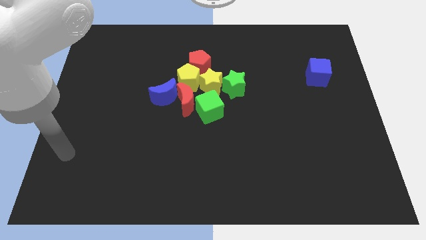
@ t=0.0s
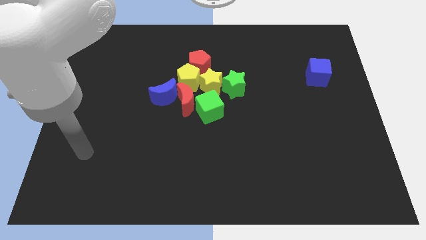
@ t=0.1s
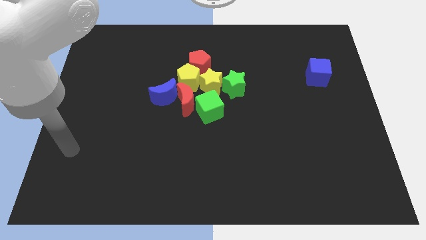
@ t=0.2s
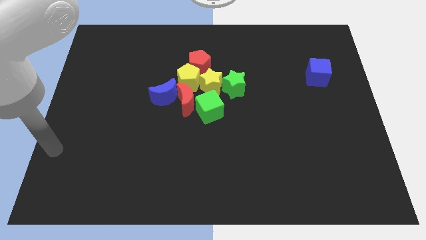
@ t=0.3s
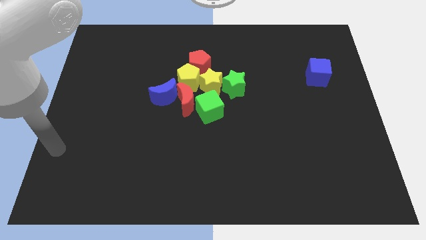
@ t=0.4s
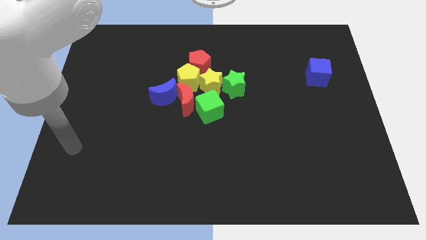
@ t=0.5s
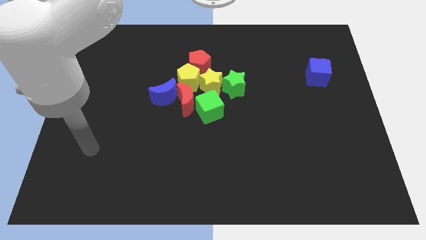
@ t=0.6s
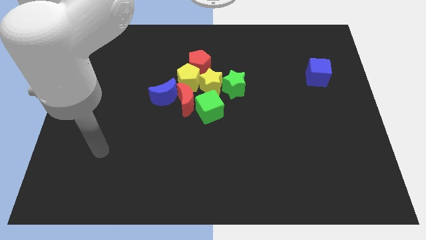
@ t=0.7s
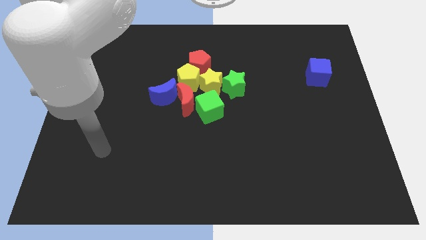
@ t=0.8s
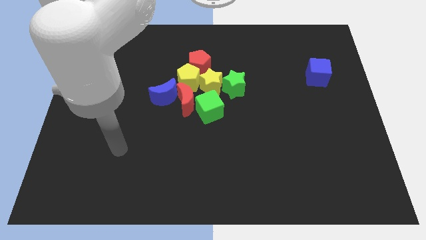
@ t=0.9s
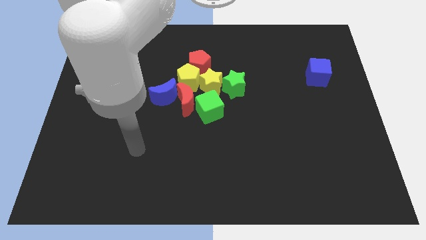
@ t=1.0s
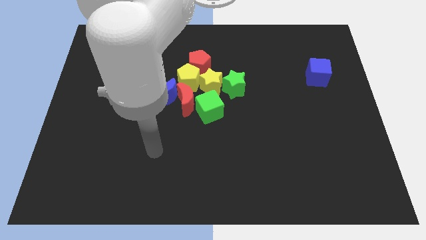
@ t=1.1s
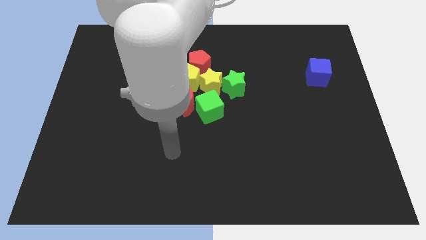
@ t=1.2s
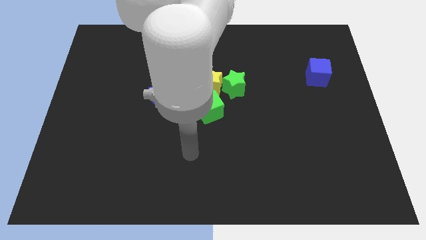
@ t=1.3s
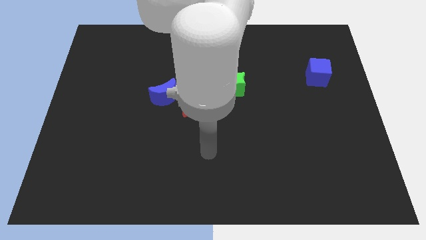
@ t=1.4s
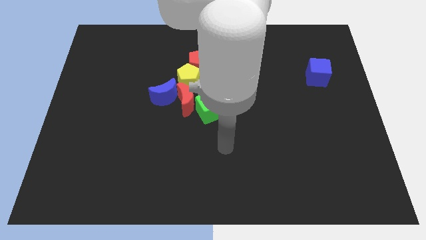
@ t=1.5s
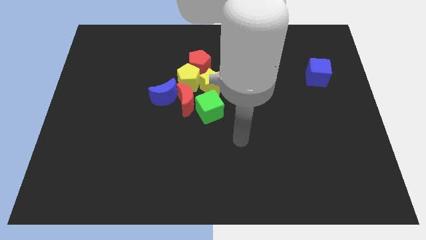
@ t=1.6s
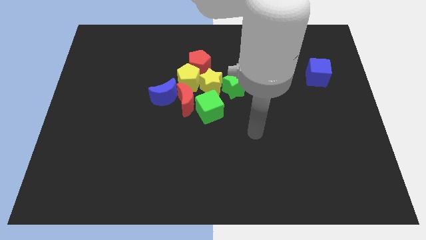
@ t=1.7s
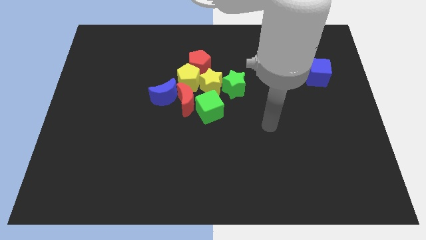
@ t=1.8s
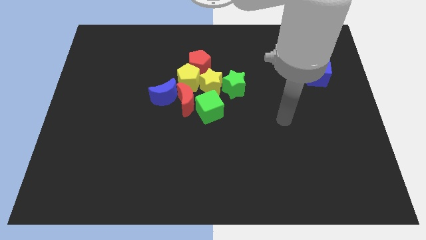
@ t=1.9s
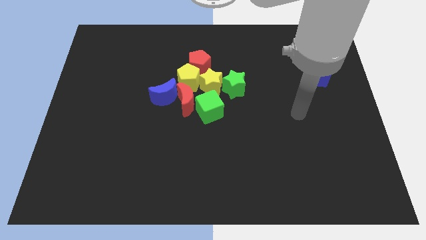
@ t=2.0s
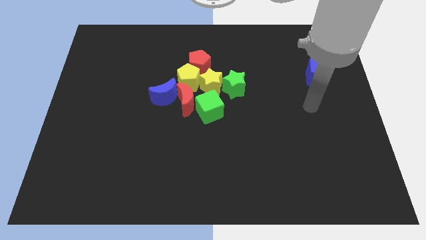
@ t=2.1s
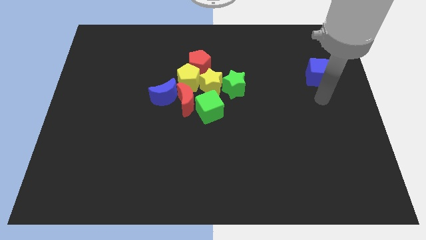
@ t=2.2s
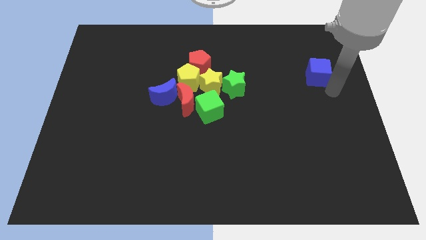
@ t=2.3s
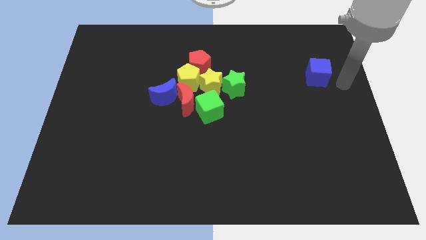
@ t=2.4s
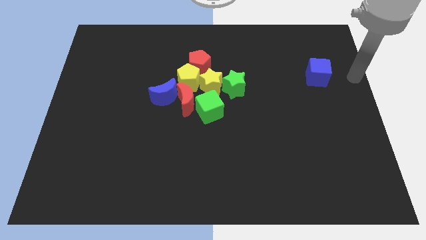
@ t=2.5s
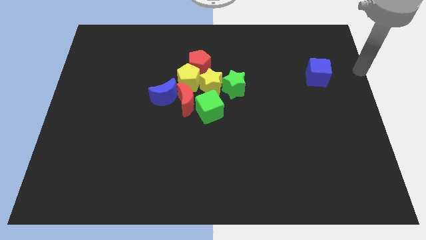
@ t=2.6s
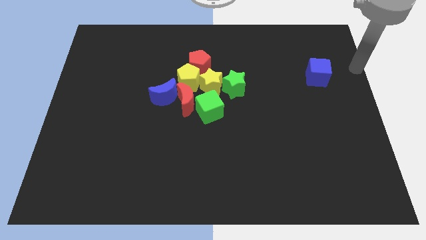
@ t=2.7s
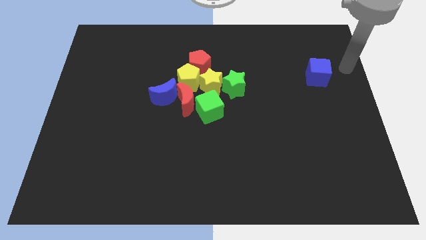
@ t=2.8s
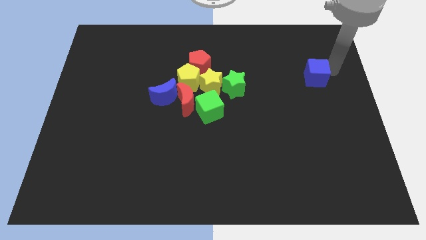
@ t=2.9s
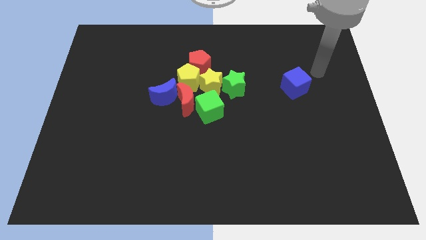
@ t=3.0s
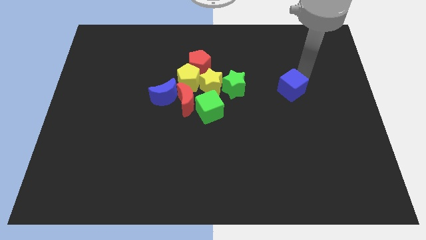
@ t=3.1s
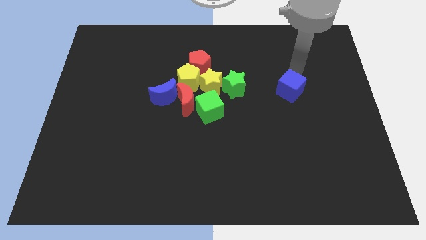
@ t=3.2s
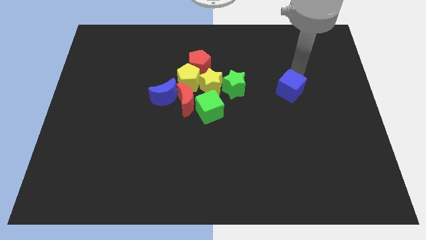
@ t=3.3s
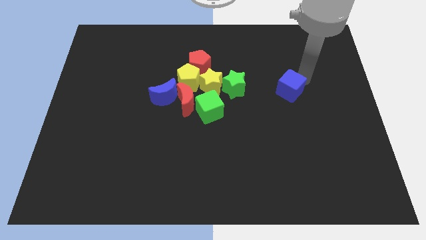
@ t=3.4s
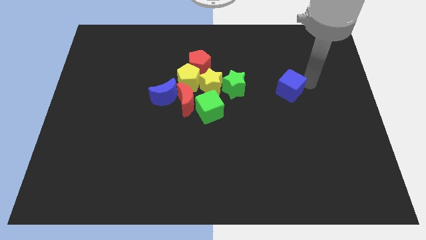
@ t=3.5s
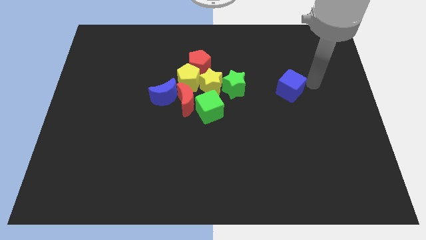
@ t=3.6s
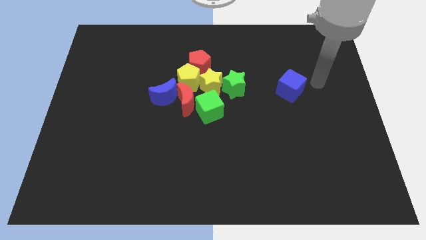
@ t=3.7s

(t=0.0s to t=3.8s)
move the arm from the bottom left center to top right of the board

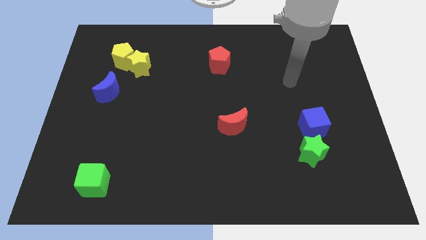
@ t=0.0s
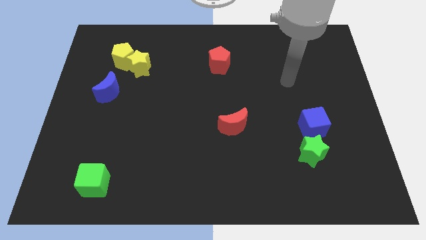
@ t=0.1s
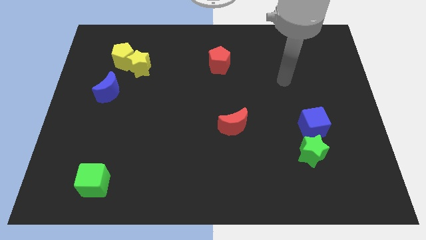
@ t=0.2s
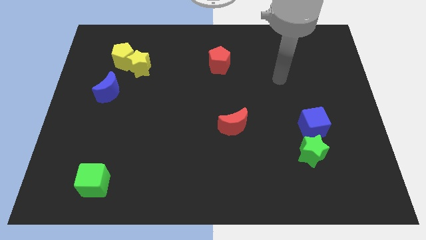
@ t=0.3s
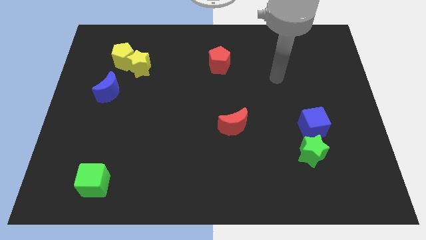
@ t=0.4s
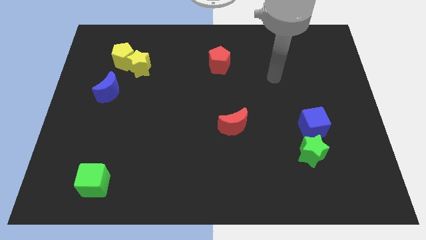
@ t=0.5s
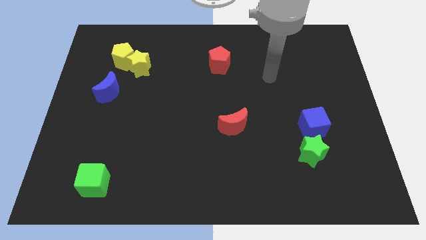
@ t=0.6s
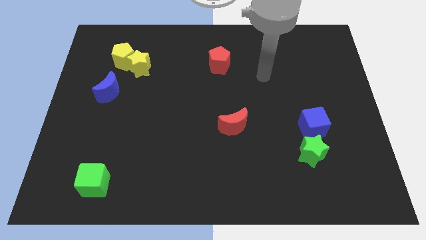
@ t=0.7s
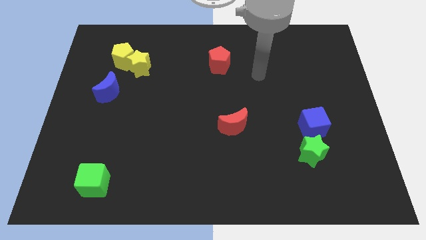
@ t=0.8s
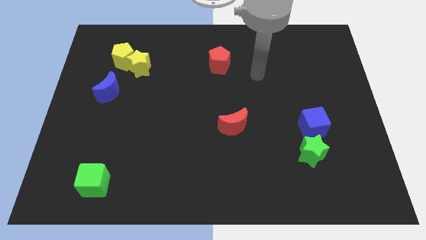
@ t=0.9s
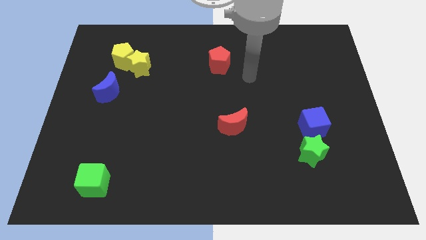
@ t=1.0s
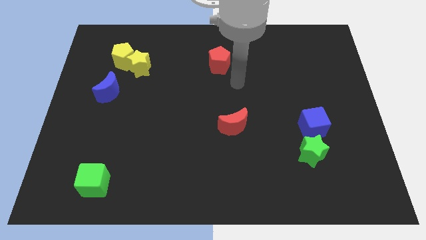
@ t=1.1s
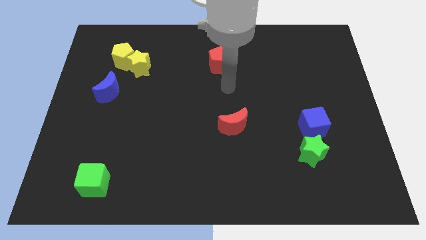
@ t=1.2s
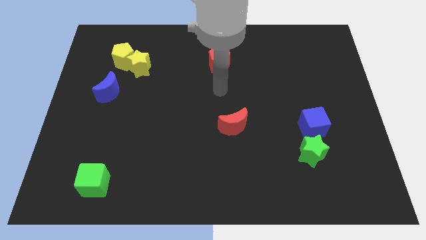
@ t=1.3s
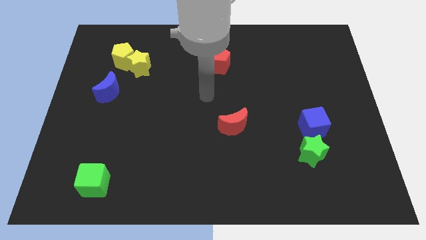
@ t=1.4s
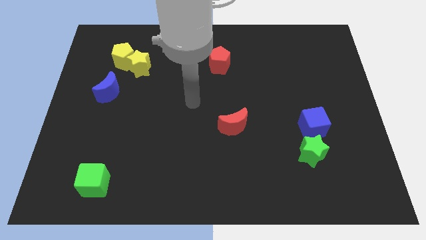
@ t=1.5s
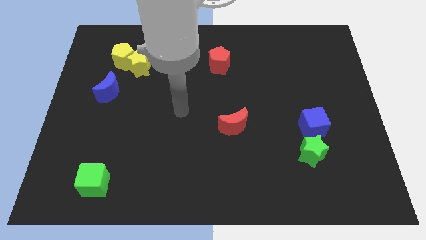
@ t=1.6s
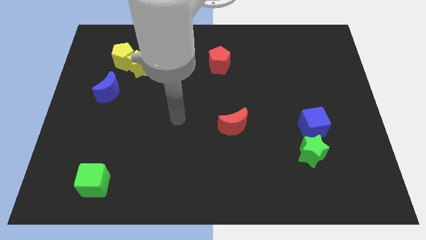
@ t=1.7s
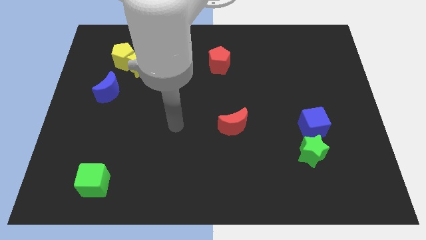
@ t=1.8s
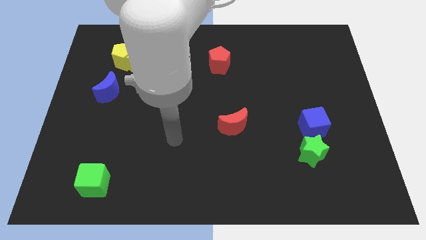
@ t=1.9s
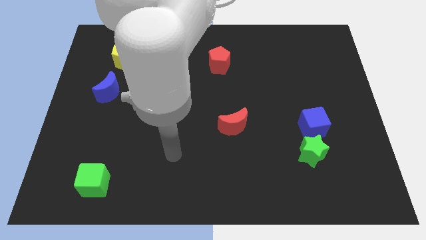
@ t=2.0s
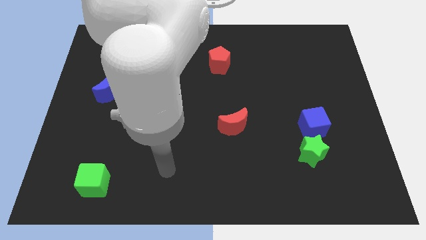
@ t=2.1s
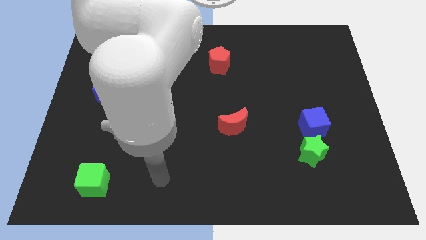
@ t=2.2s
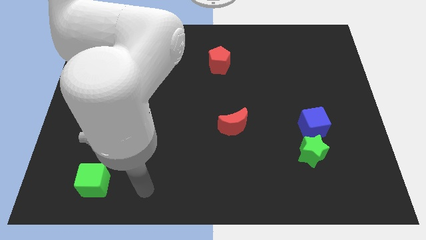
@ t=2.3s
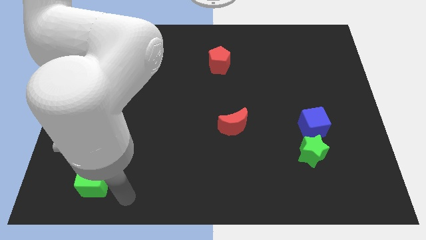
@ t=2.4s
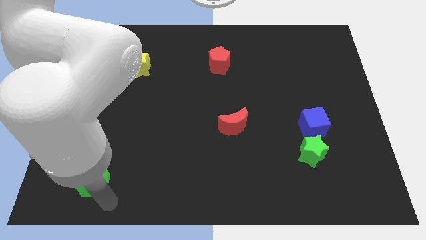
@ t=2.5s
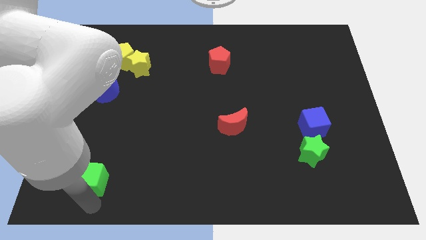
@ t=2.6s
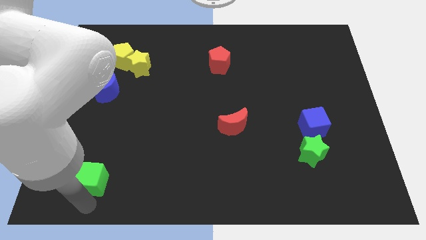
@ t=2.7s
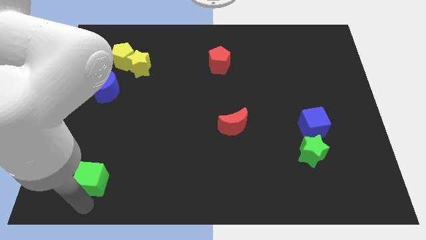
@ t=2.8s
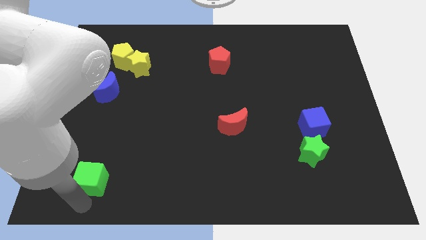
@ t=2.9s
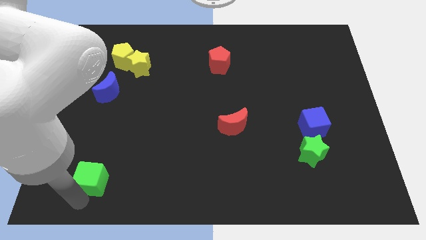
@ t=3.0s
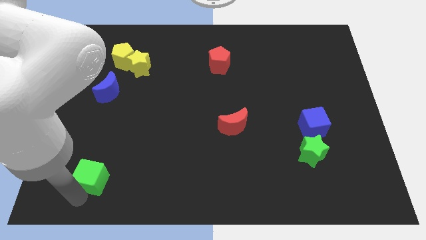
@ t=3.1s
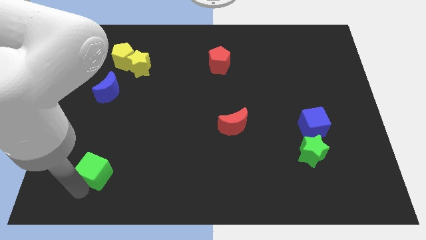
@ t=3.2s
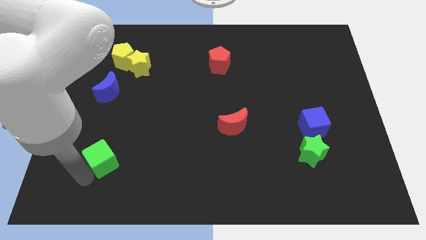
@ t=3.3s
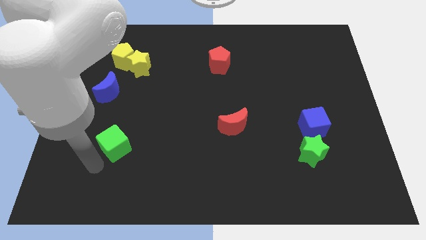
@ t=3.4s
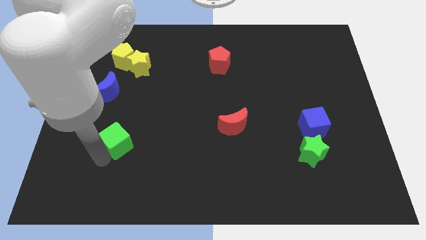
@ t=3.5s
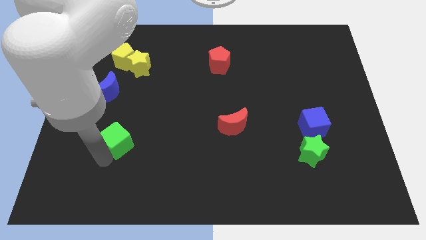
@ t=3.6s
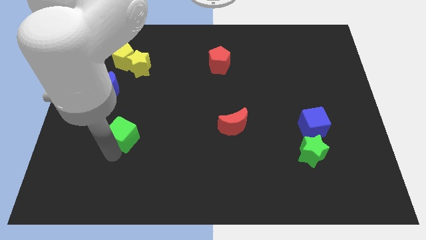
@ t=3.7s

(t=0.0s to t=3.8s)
move the green cube diagonally on the bottom left side of the red crescent

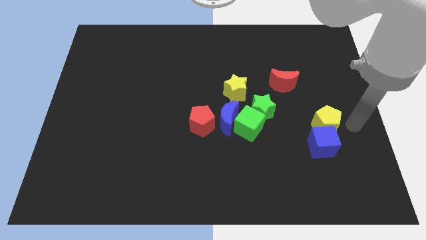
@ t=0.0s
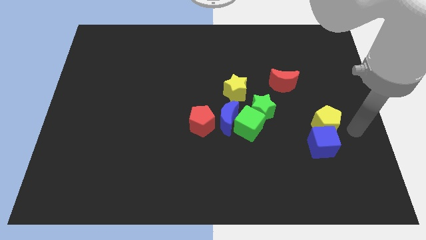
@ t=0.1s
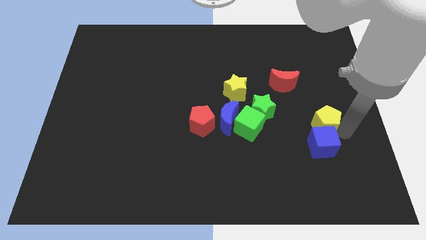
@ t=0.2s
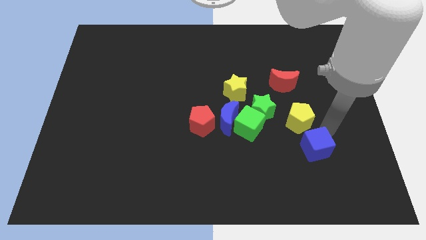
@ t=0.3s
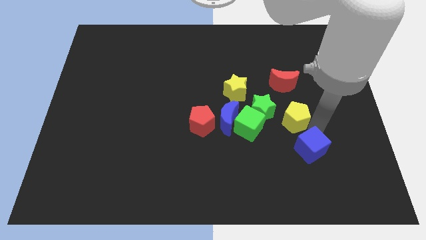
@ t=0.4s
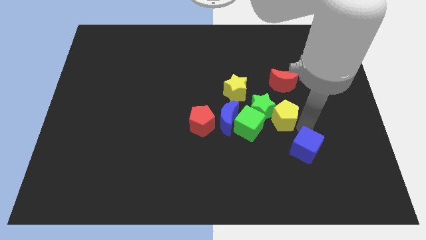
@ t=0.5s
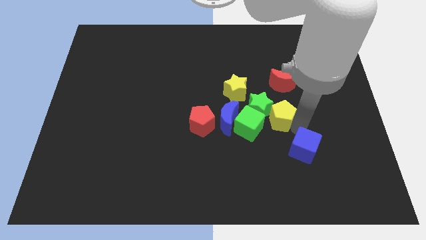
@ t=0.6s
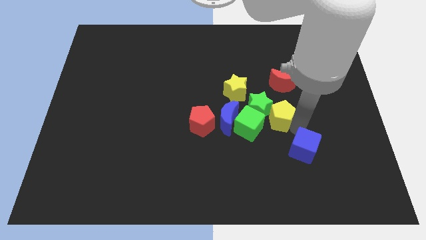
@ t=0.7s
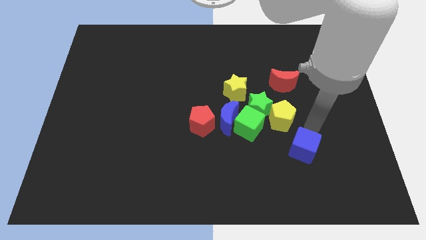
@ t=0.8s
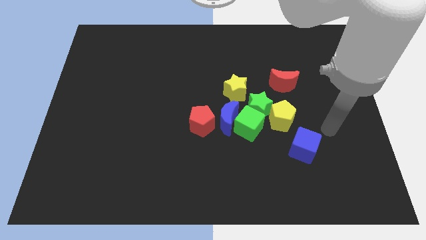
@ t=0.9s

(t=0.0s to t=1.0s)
push the yellow pentagon into green star
